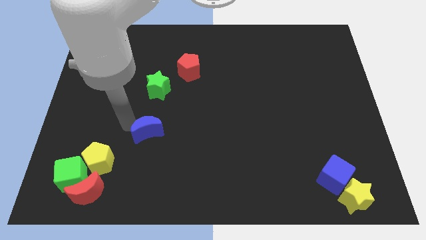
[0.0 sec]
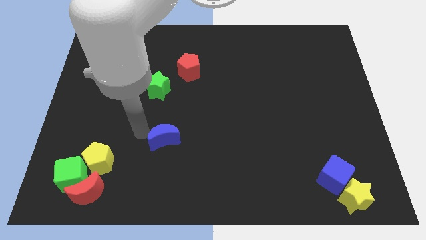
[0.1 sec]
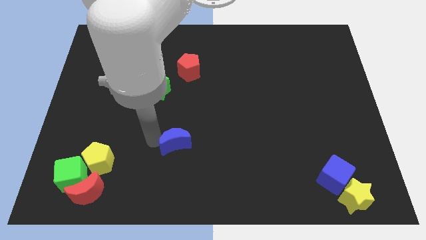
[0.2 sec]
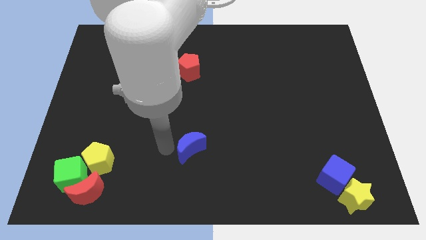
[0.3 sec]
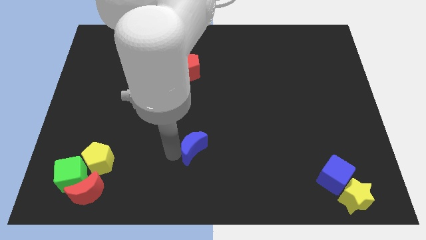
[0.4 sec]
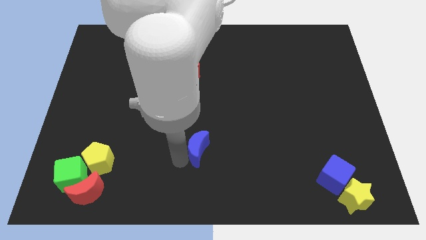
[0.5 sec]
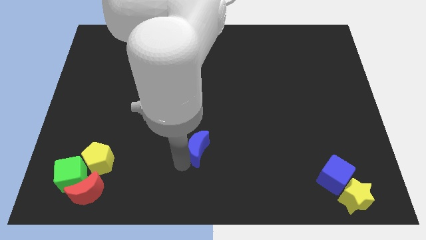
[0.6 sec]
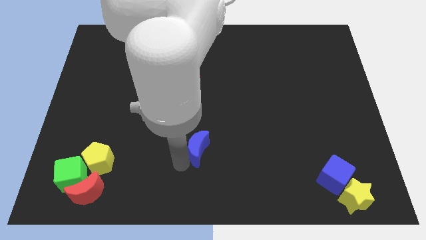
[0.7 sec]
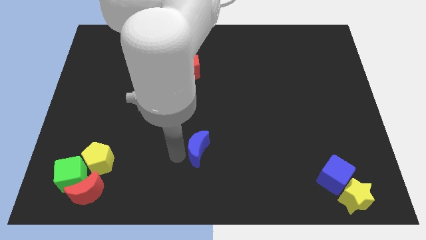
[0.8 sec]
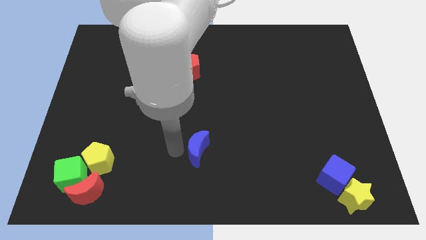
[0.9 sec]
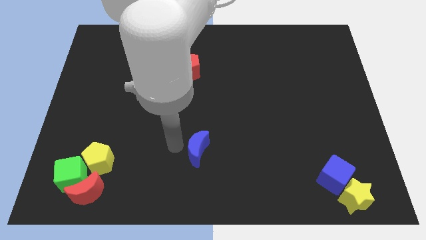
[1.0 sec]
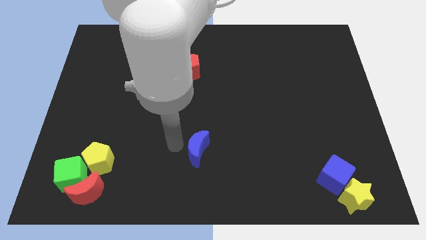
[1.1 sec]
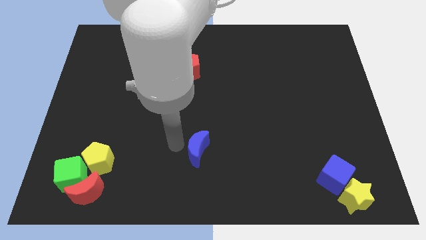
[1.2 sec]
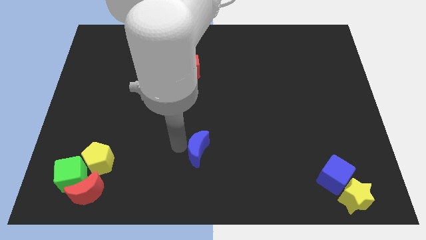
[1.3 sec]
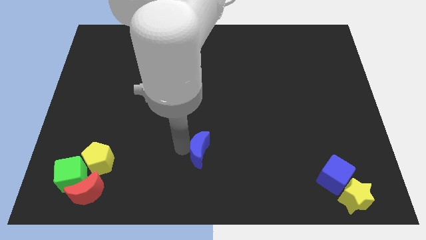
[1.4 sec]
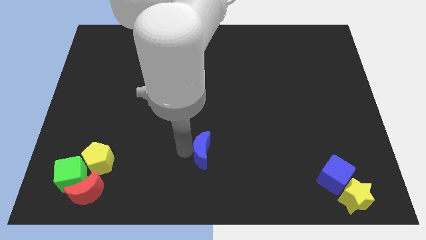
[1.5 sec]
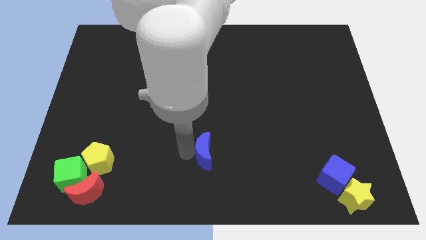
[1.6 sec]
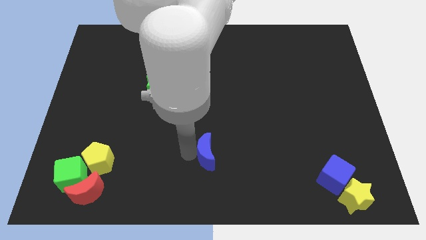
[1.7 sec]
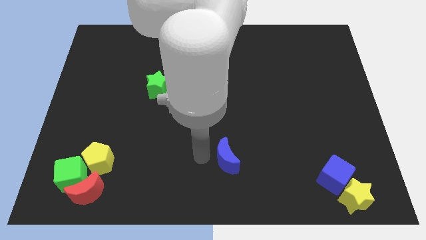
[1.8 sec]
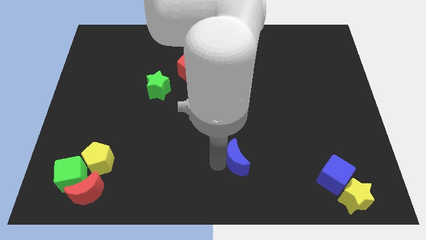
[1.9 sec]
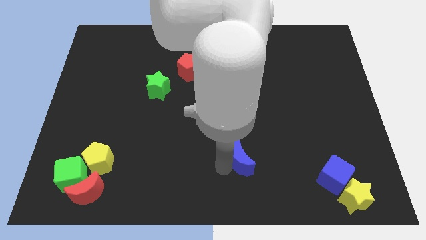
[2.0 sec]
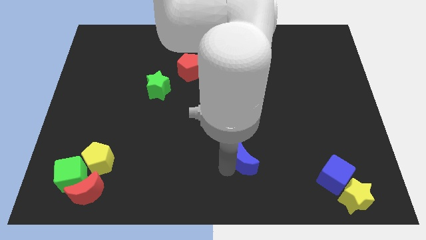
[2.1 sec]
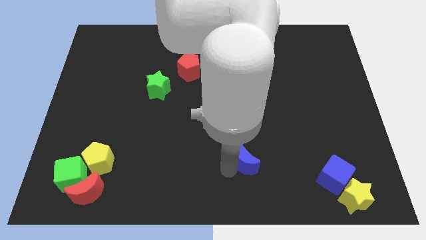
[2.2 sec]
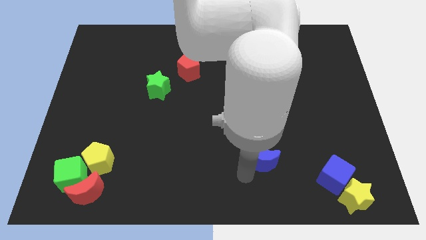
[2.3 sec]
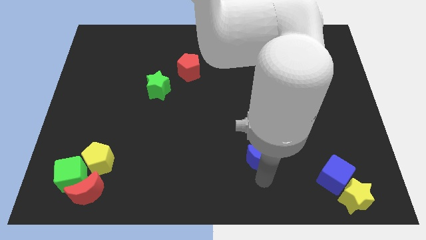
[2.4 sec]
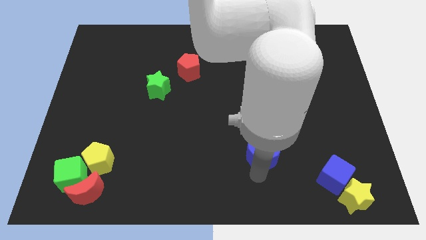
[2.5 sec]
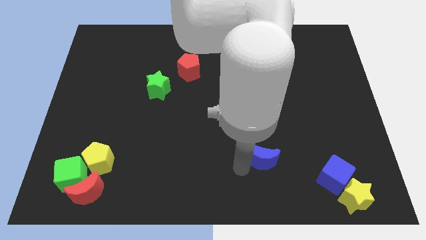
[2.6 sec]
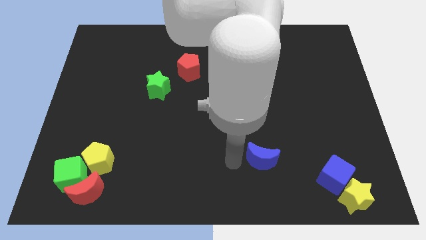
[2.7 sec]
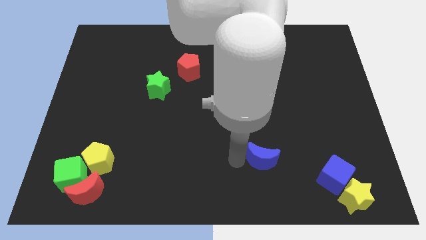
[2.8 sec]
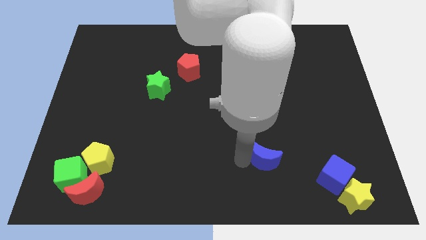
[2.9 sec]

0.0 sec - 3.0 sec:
move blue moon towards blue cube

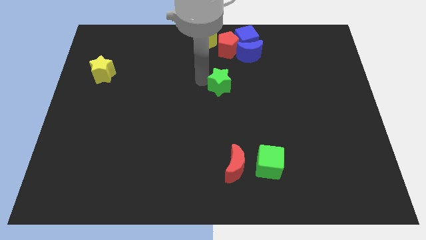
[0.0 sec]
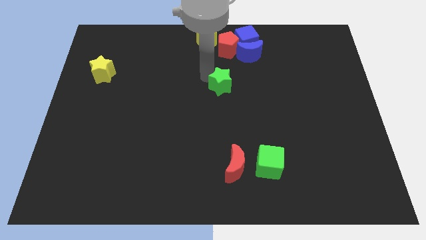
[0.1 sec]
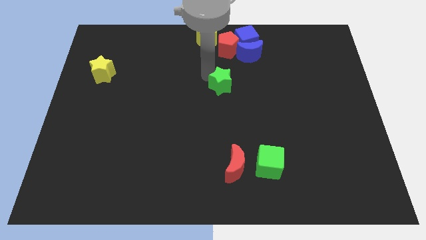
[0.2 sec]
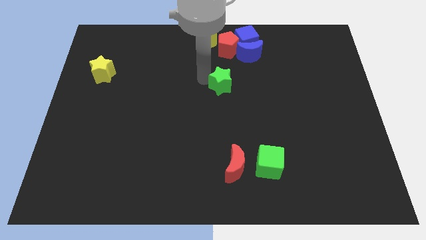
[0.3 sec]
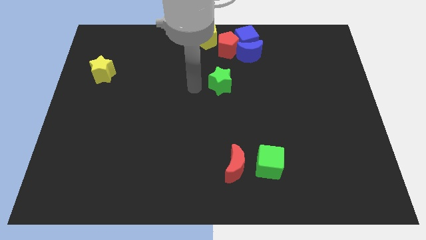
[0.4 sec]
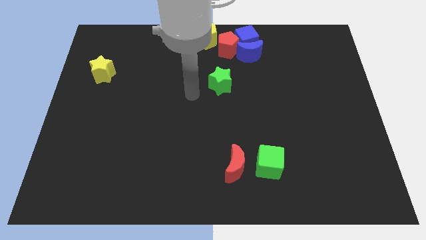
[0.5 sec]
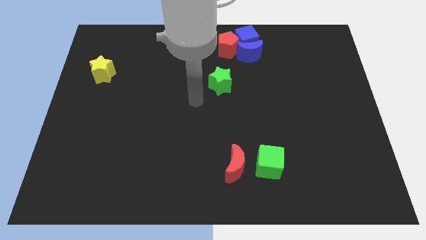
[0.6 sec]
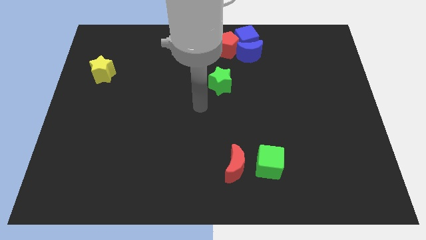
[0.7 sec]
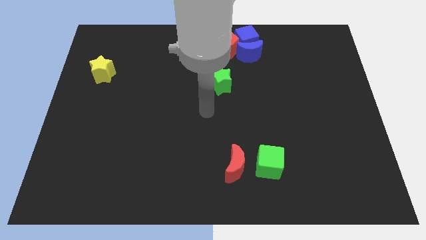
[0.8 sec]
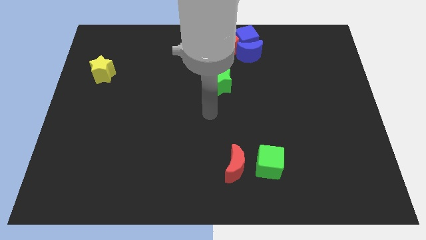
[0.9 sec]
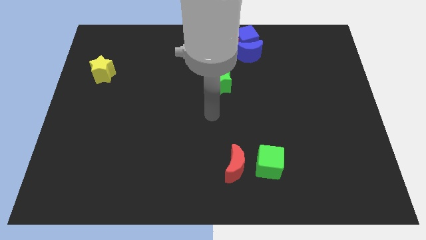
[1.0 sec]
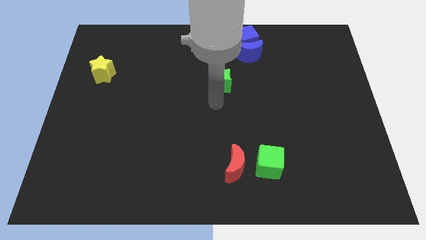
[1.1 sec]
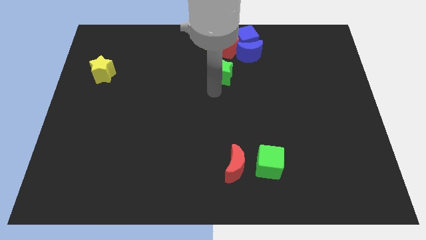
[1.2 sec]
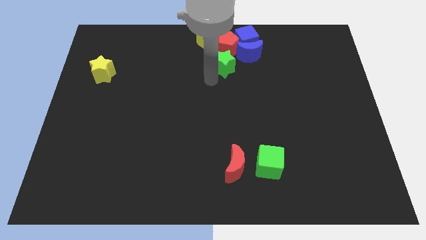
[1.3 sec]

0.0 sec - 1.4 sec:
push the green star into the red pentagon

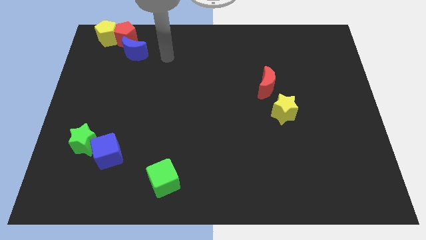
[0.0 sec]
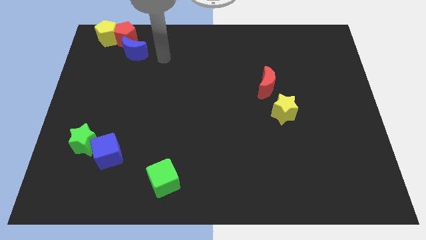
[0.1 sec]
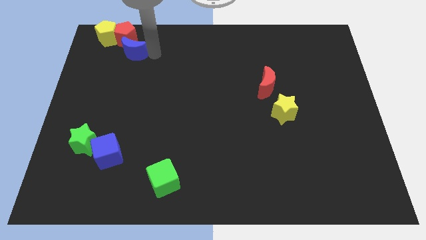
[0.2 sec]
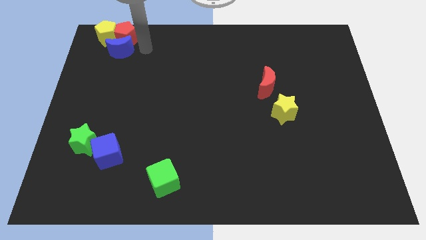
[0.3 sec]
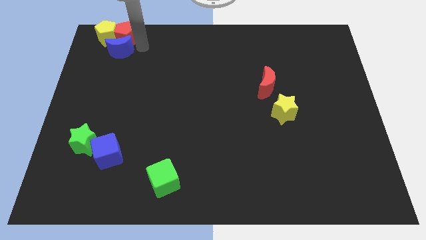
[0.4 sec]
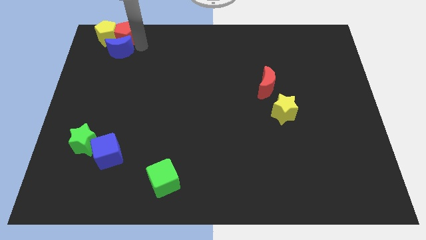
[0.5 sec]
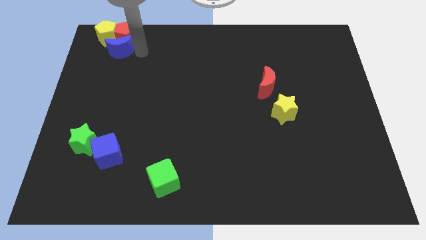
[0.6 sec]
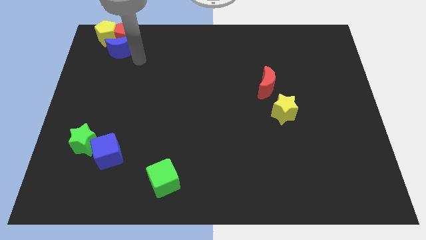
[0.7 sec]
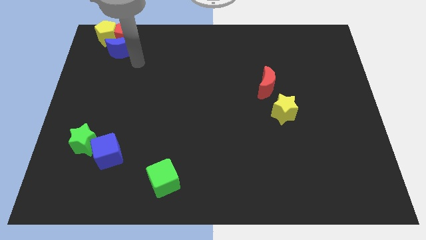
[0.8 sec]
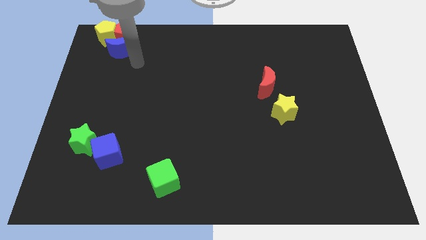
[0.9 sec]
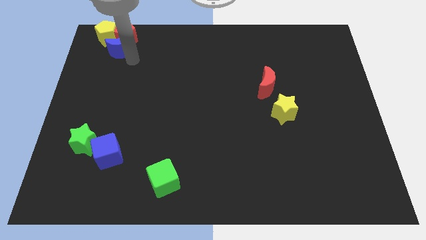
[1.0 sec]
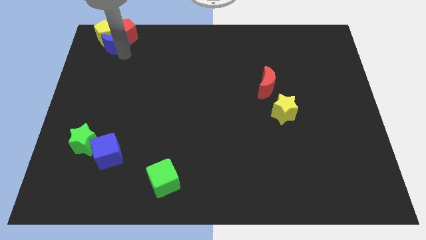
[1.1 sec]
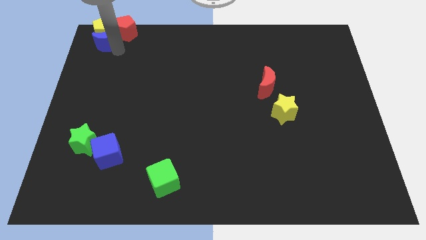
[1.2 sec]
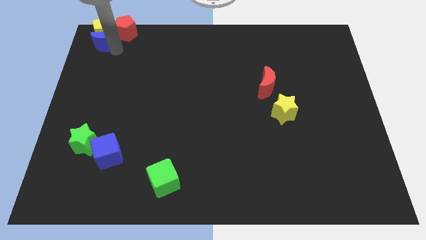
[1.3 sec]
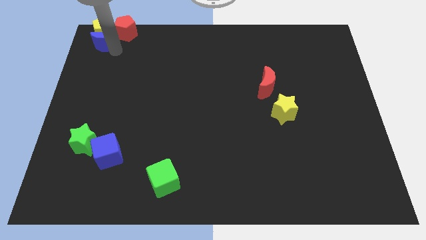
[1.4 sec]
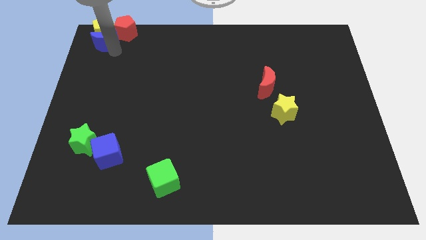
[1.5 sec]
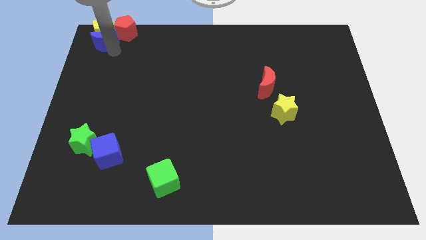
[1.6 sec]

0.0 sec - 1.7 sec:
push the blue crescent into the yellow pentagon

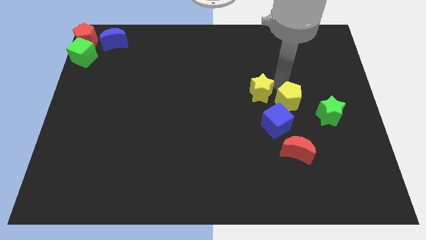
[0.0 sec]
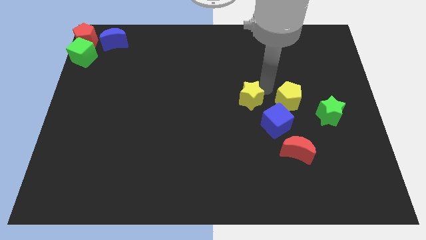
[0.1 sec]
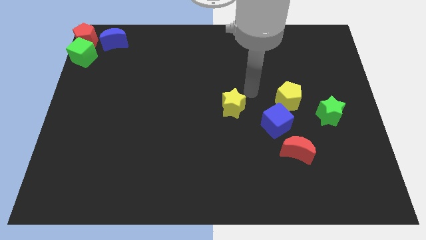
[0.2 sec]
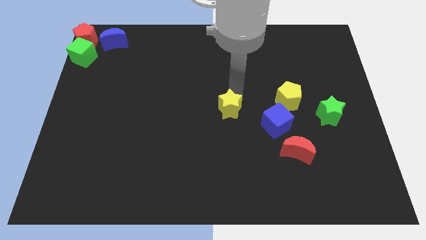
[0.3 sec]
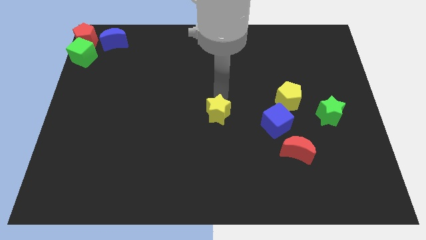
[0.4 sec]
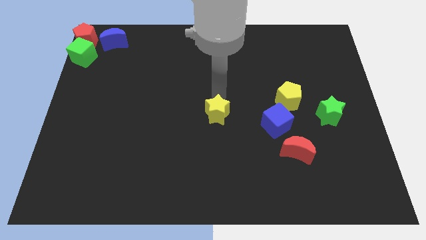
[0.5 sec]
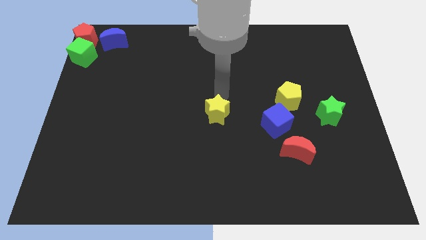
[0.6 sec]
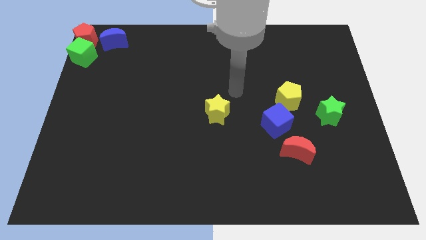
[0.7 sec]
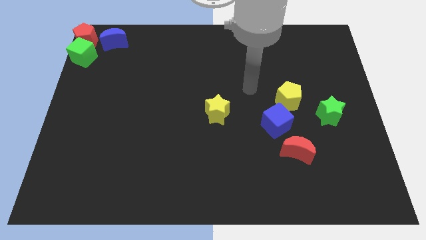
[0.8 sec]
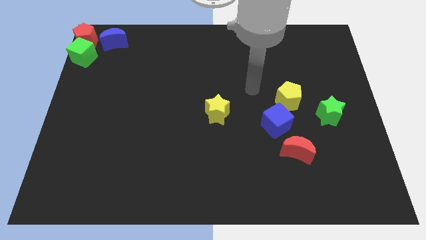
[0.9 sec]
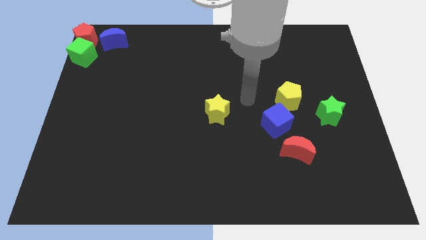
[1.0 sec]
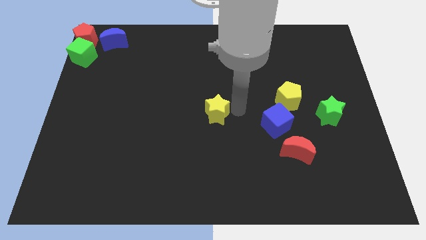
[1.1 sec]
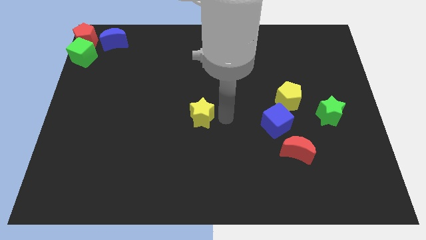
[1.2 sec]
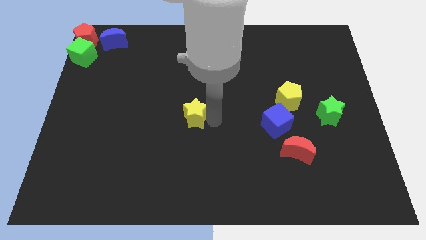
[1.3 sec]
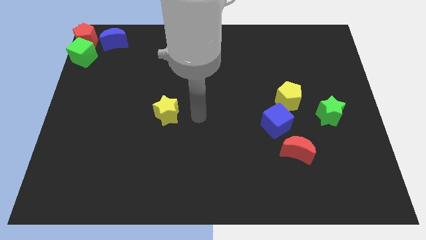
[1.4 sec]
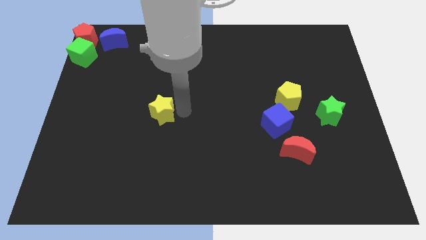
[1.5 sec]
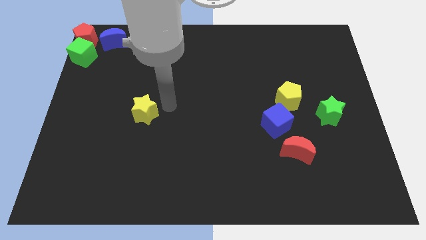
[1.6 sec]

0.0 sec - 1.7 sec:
push the yellow star towards the left of the board

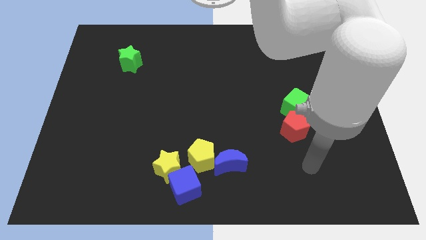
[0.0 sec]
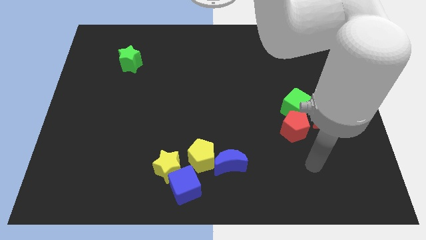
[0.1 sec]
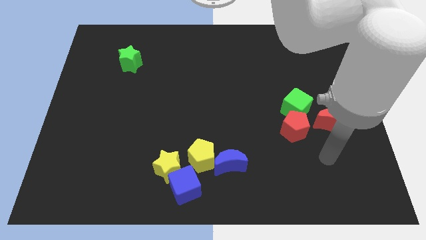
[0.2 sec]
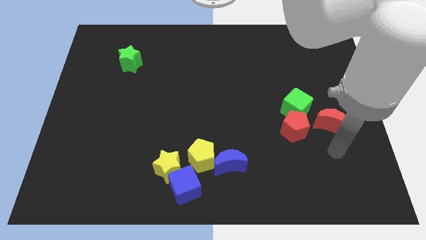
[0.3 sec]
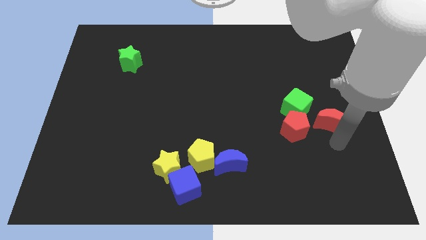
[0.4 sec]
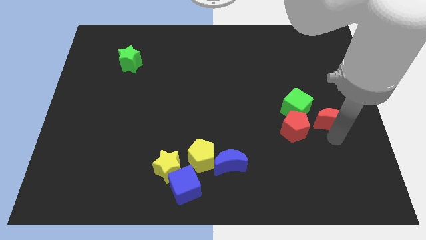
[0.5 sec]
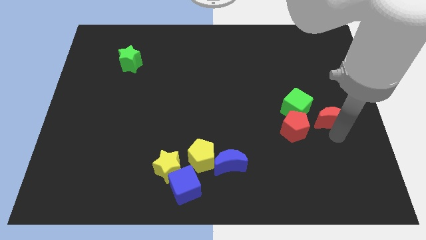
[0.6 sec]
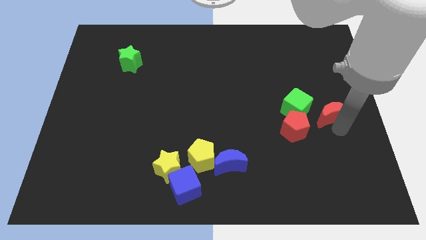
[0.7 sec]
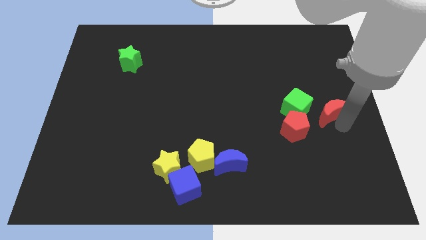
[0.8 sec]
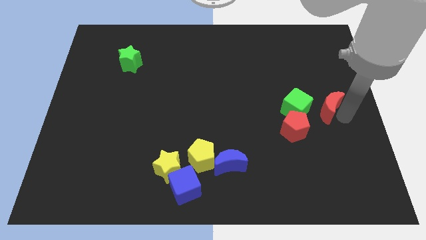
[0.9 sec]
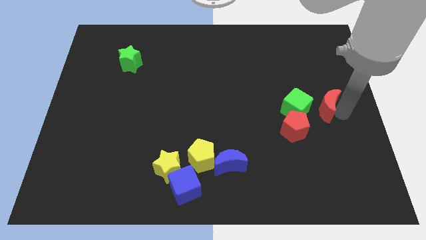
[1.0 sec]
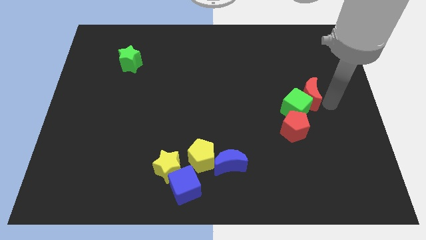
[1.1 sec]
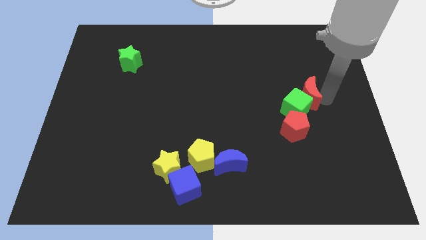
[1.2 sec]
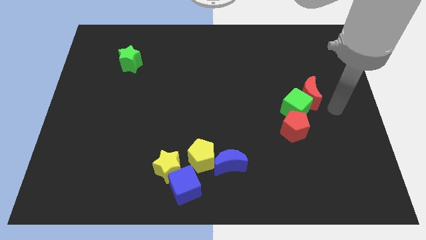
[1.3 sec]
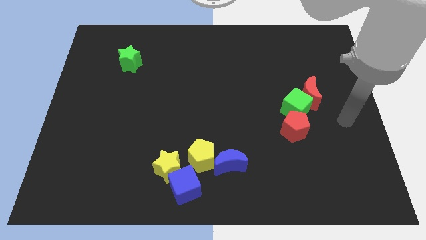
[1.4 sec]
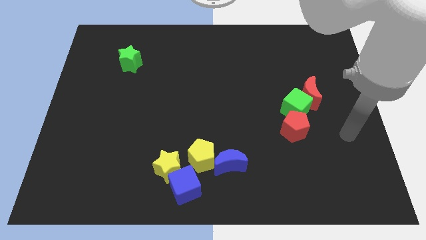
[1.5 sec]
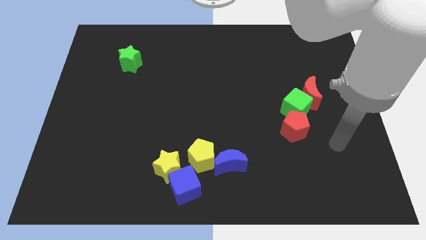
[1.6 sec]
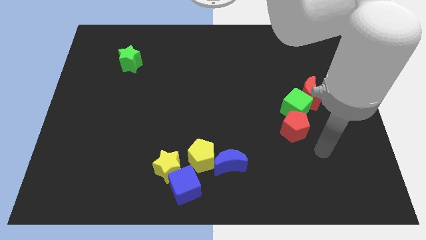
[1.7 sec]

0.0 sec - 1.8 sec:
place the red moon diagonally top right to the green cube
